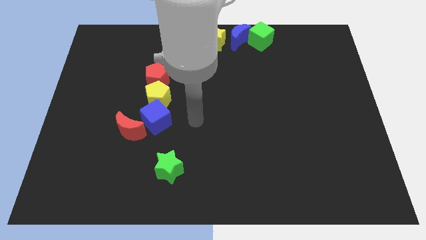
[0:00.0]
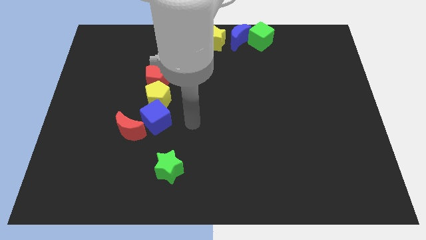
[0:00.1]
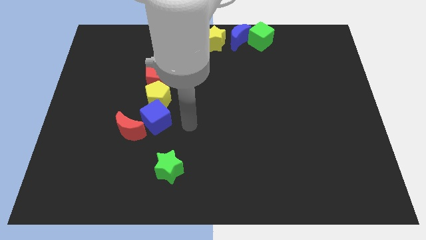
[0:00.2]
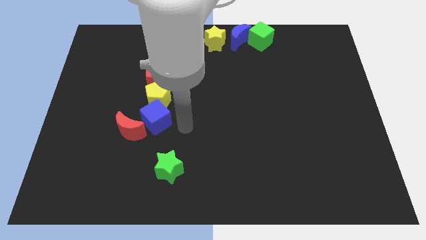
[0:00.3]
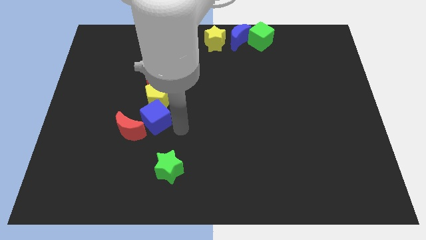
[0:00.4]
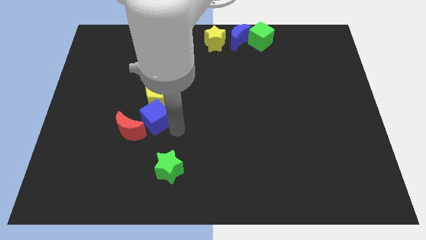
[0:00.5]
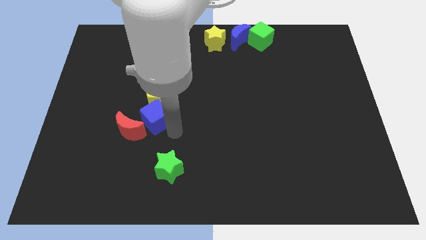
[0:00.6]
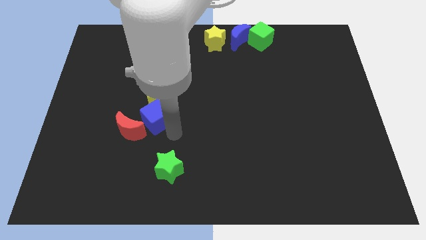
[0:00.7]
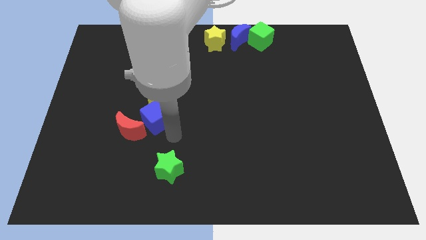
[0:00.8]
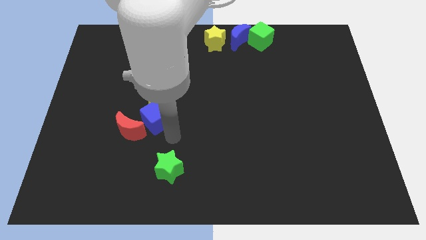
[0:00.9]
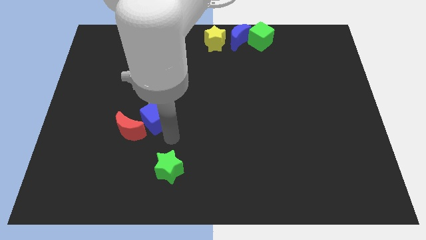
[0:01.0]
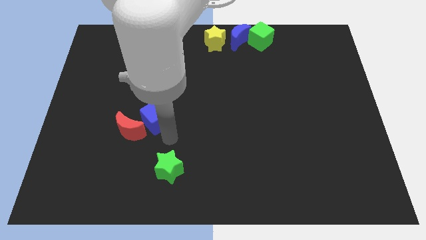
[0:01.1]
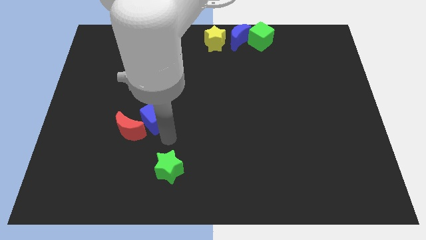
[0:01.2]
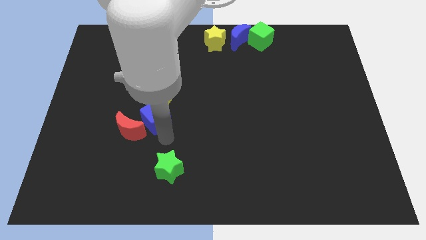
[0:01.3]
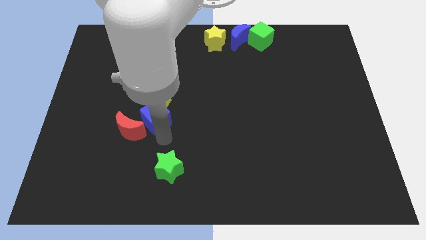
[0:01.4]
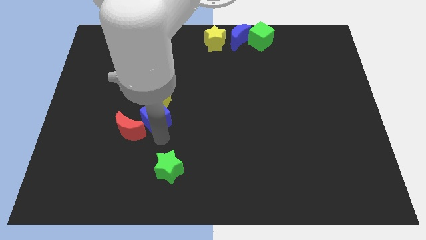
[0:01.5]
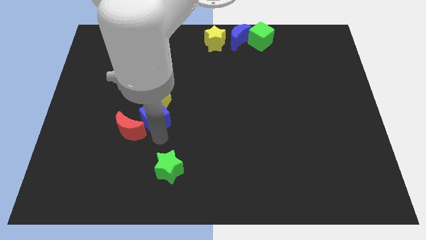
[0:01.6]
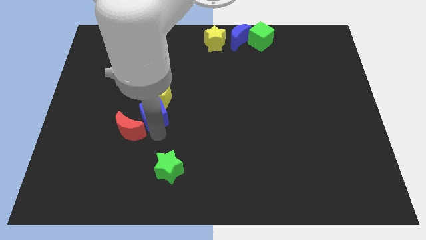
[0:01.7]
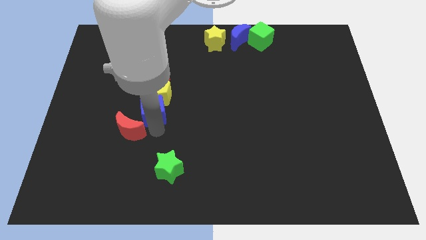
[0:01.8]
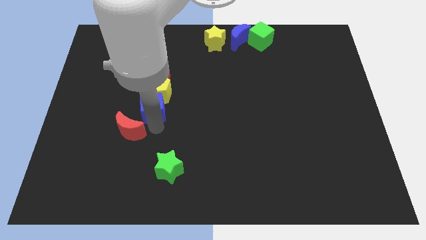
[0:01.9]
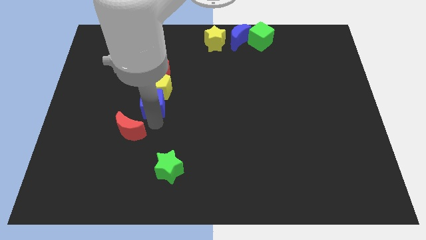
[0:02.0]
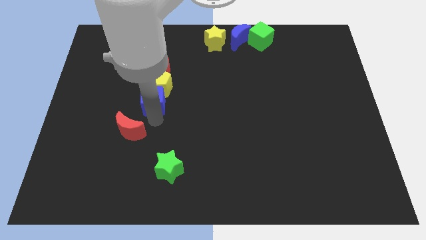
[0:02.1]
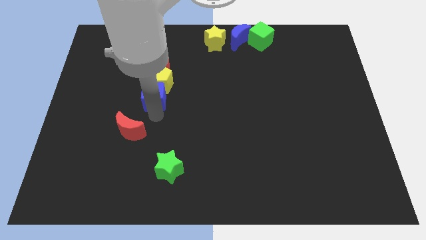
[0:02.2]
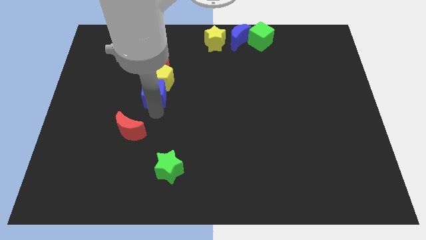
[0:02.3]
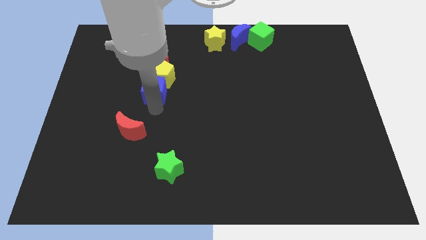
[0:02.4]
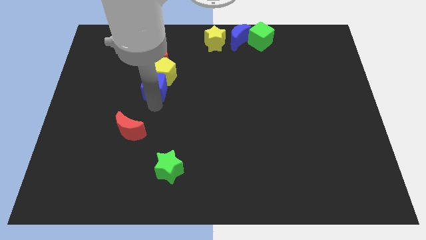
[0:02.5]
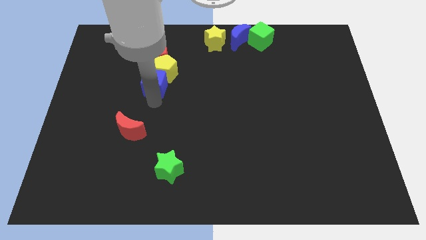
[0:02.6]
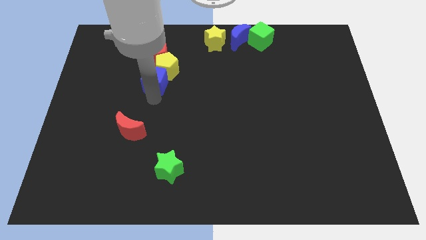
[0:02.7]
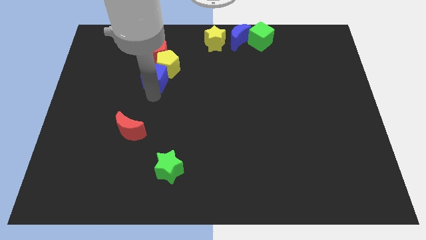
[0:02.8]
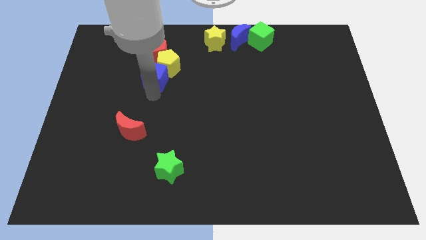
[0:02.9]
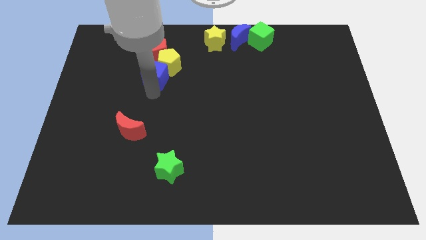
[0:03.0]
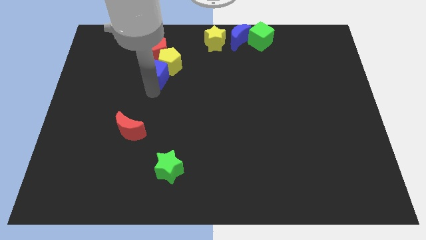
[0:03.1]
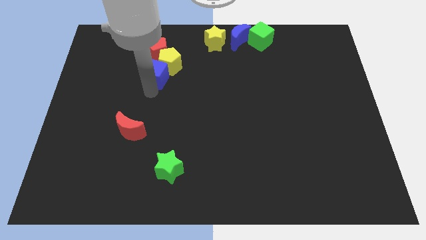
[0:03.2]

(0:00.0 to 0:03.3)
push the blue cube along with the yellow pentagon toward the yellow star

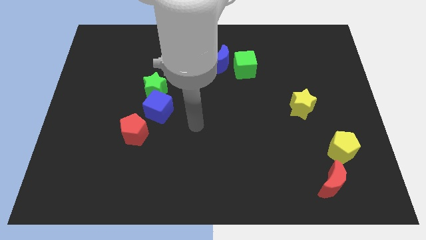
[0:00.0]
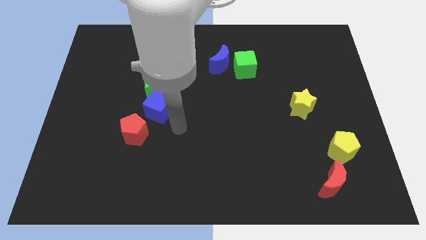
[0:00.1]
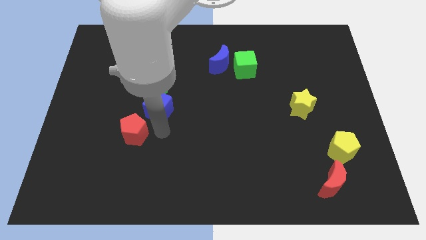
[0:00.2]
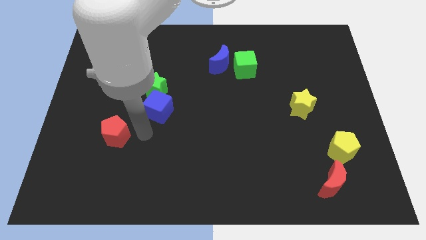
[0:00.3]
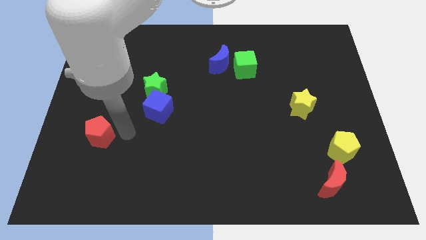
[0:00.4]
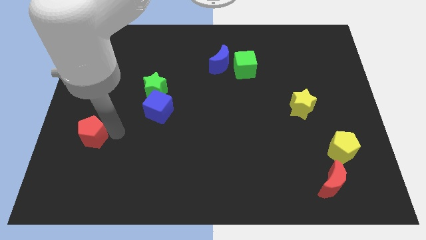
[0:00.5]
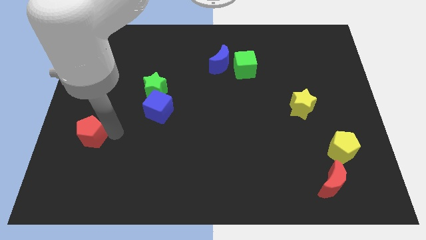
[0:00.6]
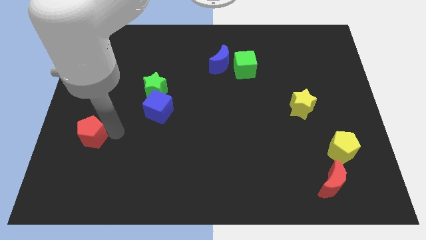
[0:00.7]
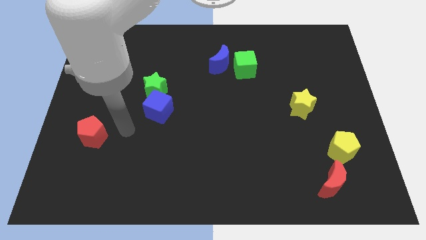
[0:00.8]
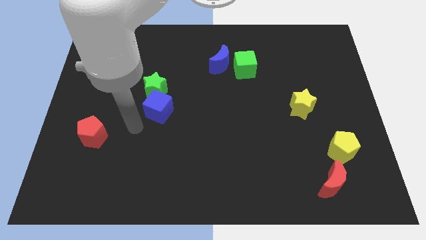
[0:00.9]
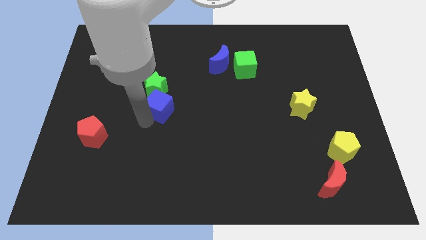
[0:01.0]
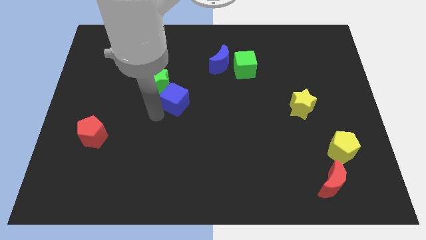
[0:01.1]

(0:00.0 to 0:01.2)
move the red pentagon away from the blue cube

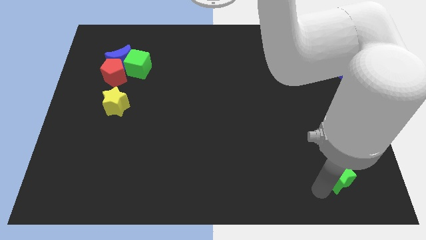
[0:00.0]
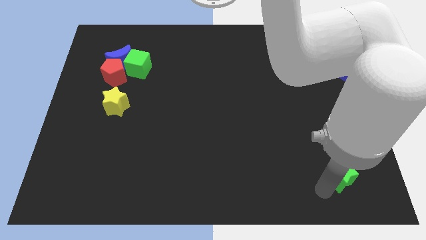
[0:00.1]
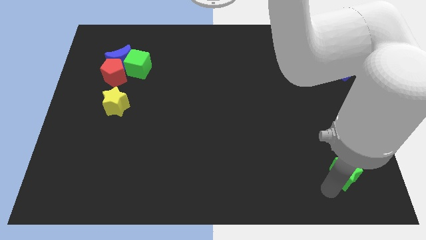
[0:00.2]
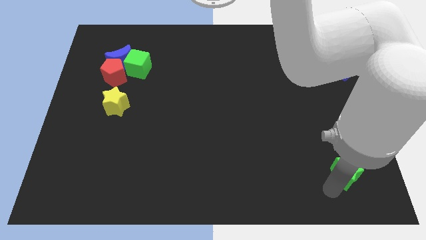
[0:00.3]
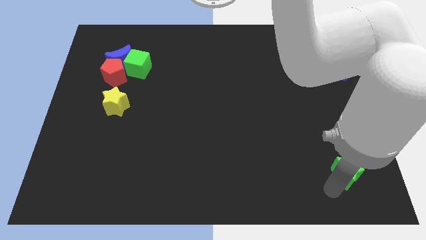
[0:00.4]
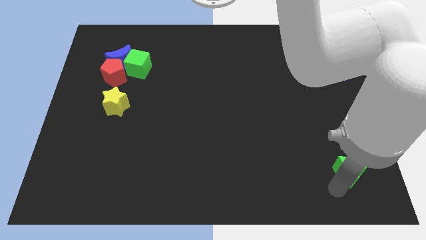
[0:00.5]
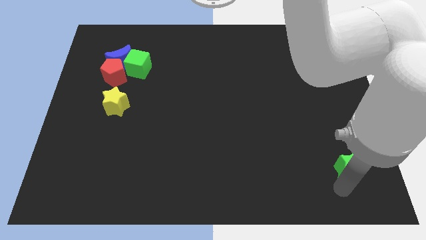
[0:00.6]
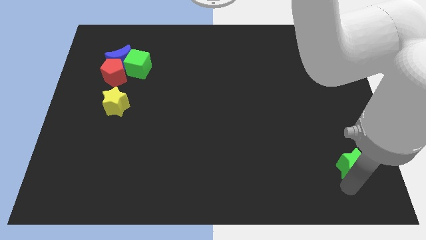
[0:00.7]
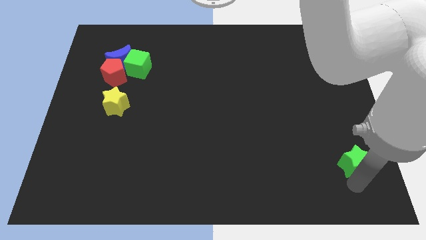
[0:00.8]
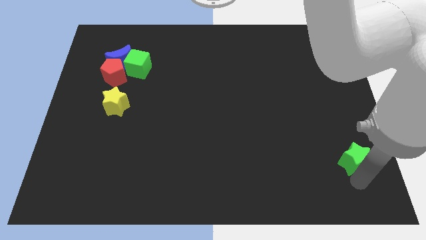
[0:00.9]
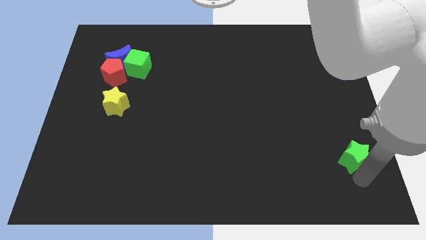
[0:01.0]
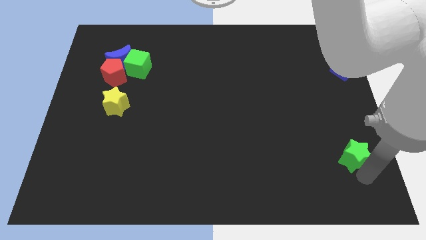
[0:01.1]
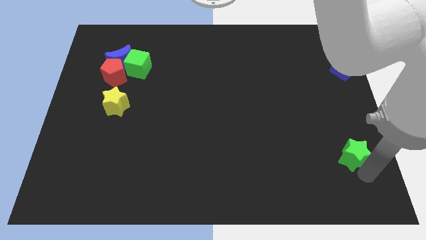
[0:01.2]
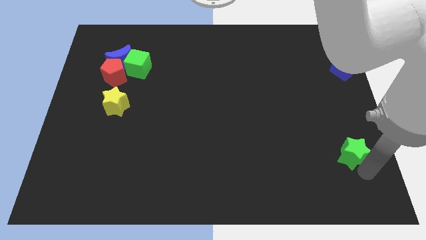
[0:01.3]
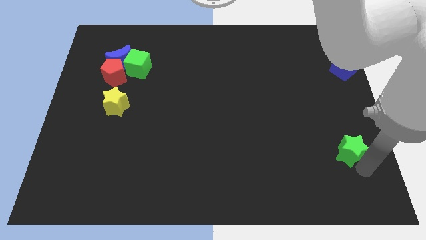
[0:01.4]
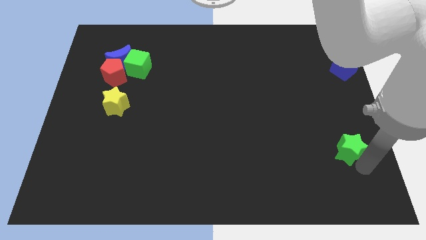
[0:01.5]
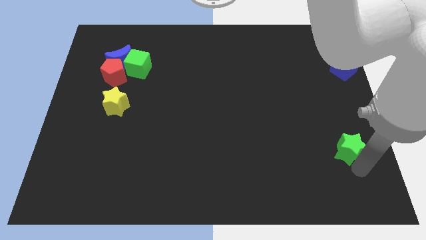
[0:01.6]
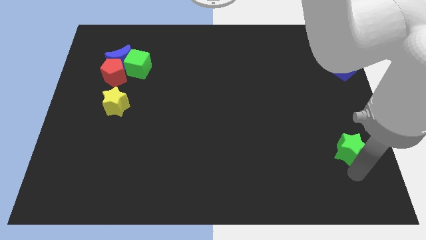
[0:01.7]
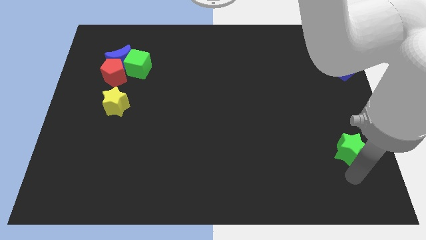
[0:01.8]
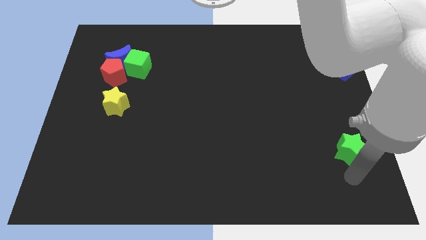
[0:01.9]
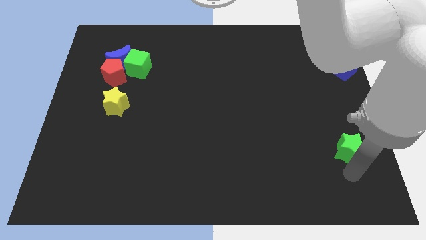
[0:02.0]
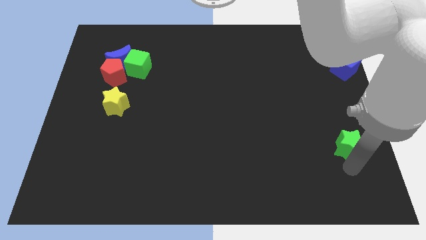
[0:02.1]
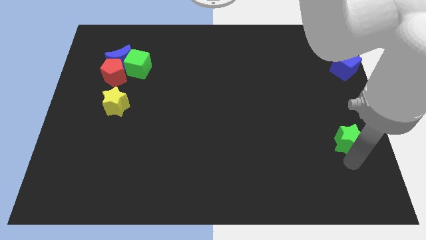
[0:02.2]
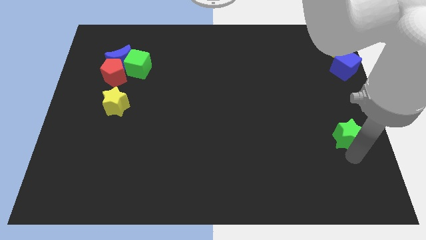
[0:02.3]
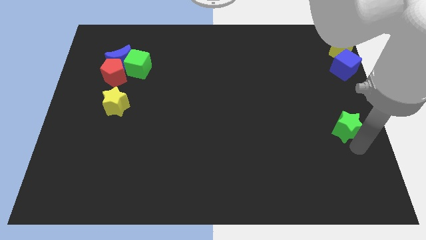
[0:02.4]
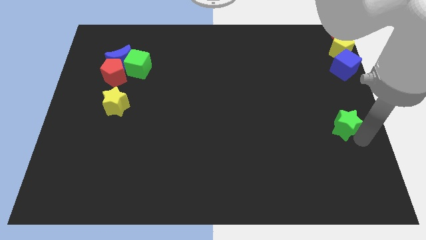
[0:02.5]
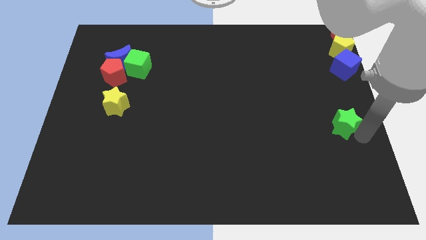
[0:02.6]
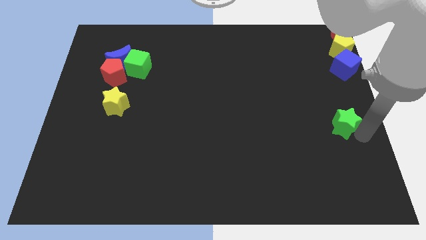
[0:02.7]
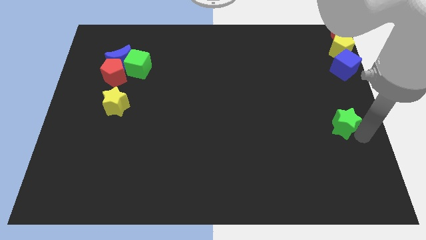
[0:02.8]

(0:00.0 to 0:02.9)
push the green star to the center right

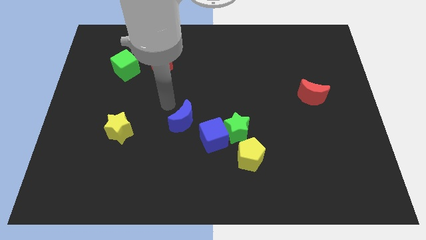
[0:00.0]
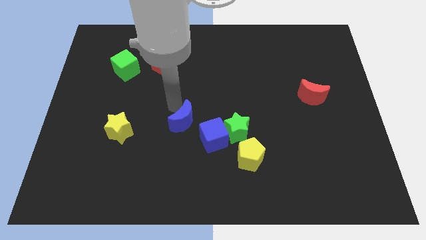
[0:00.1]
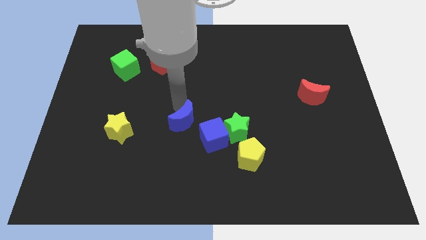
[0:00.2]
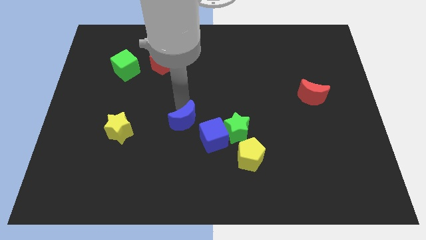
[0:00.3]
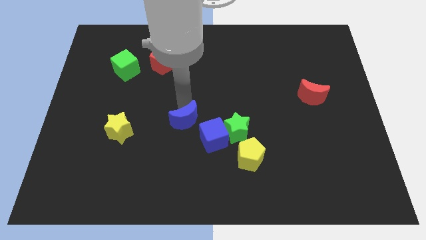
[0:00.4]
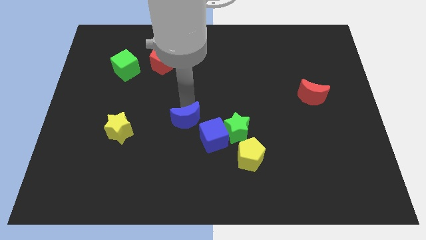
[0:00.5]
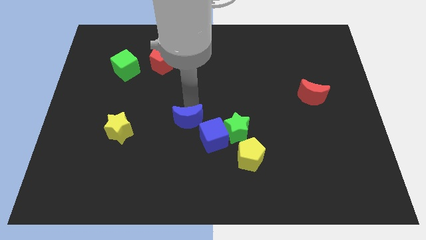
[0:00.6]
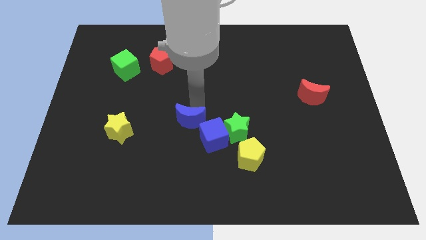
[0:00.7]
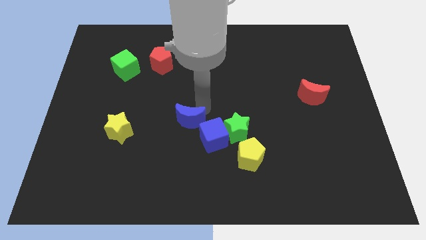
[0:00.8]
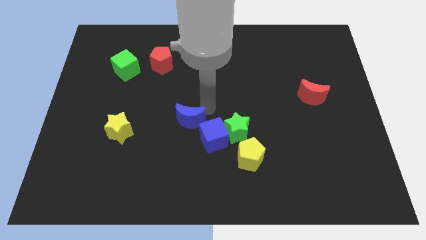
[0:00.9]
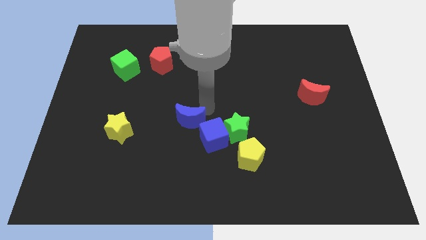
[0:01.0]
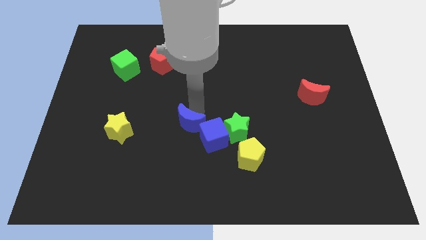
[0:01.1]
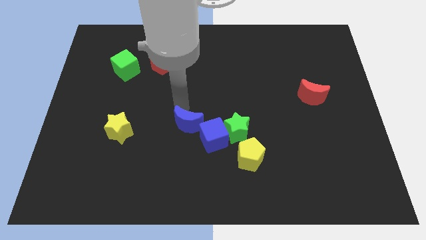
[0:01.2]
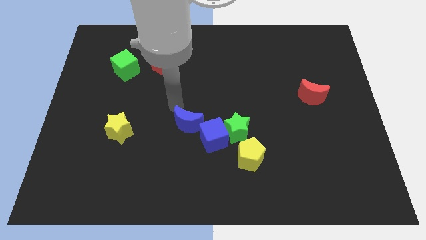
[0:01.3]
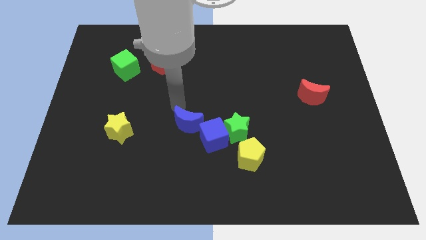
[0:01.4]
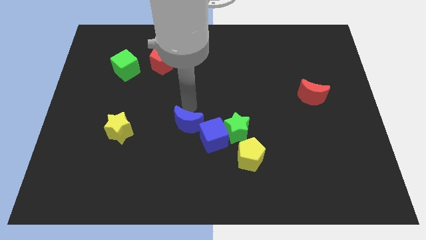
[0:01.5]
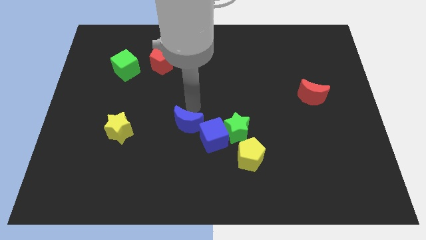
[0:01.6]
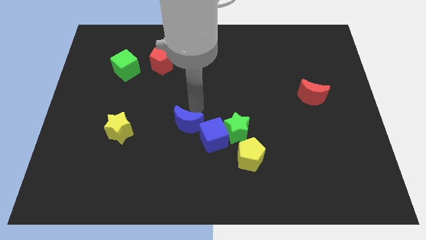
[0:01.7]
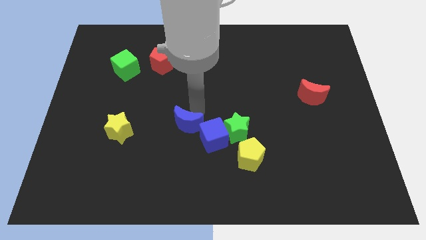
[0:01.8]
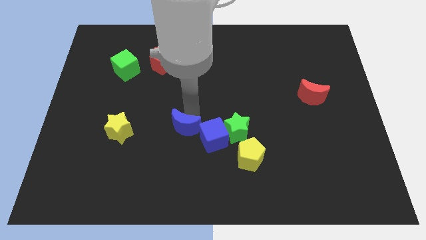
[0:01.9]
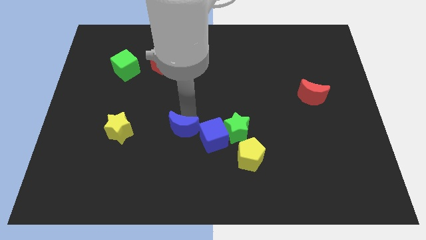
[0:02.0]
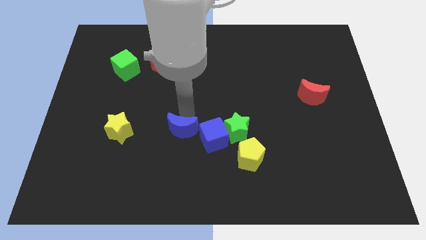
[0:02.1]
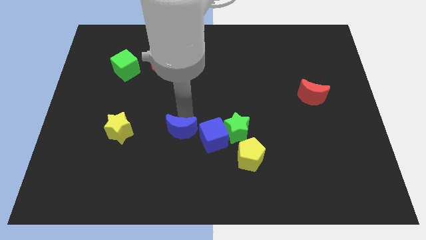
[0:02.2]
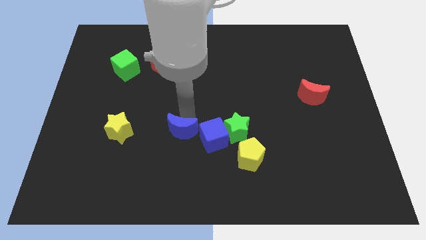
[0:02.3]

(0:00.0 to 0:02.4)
move the blue crescent to the left of the blue cube
